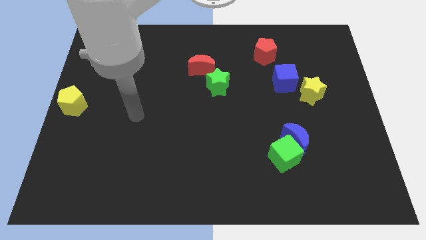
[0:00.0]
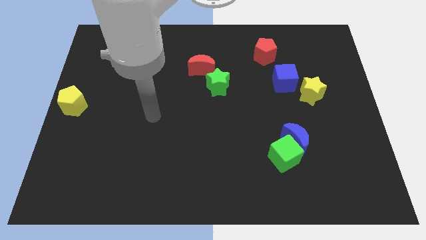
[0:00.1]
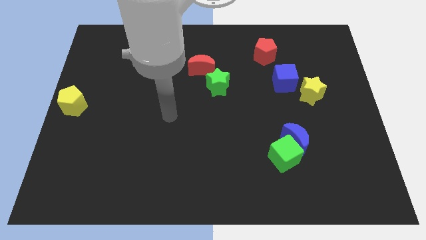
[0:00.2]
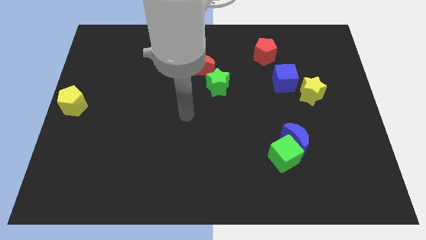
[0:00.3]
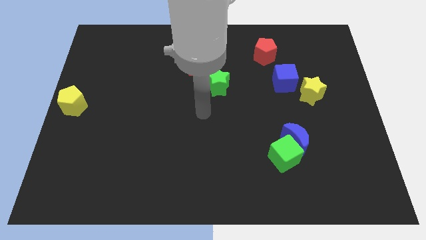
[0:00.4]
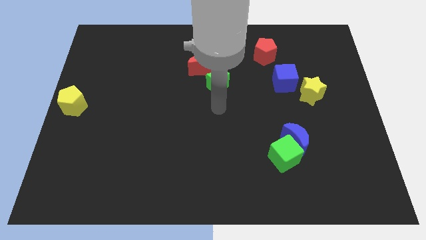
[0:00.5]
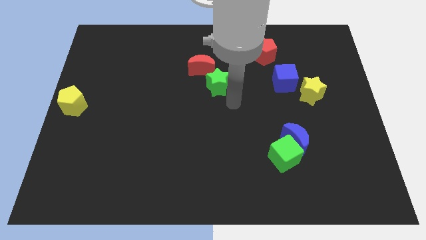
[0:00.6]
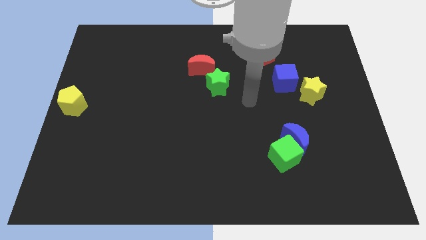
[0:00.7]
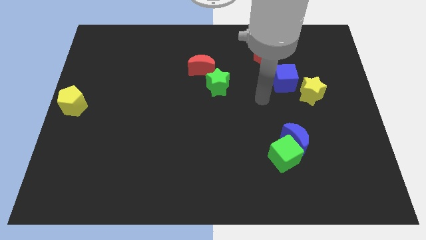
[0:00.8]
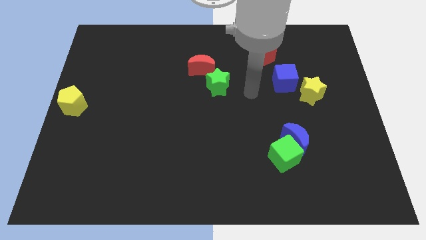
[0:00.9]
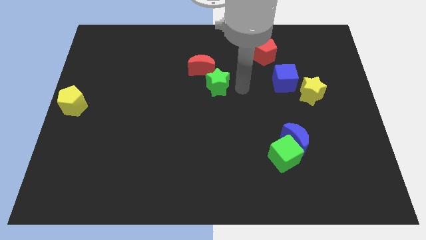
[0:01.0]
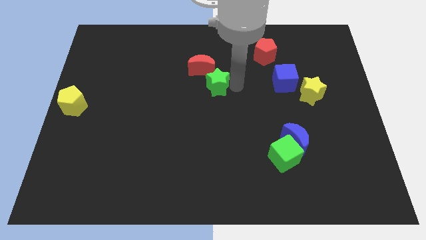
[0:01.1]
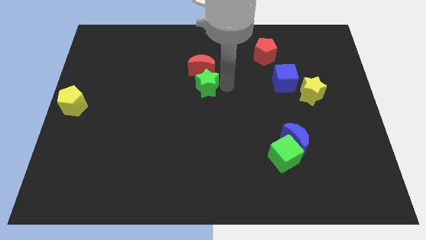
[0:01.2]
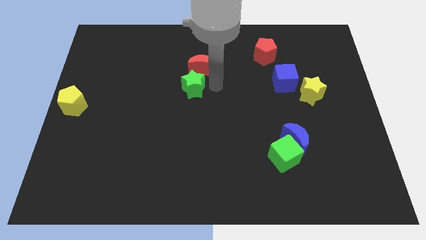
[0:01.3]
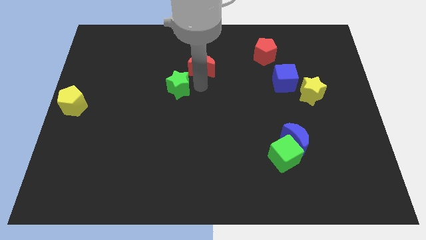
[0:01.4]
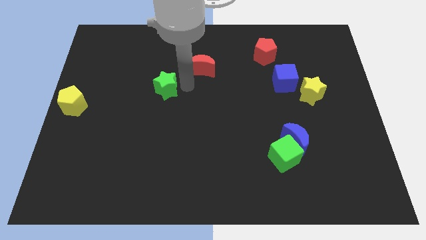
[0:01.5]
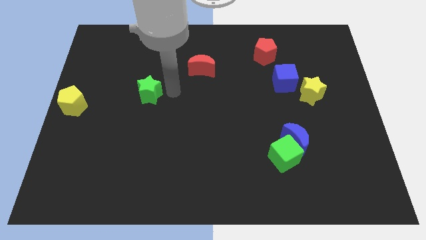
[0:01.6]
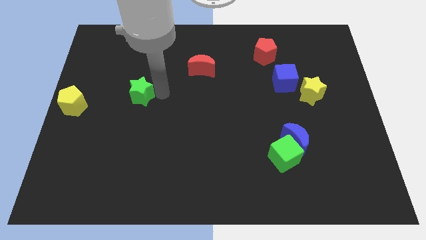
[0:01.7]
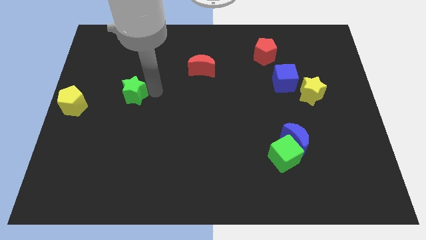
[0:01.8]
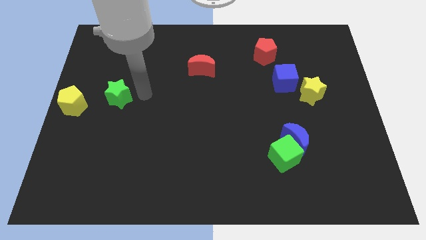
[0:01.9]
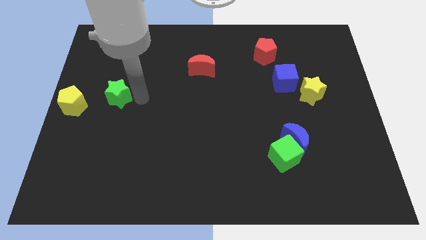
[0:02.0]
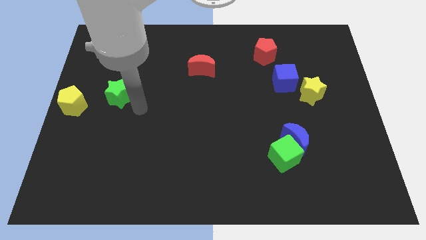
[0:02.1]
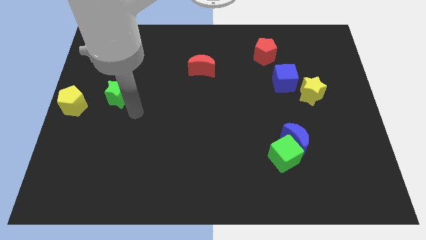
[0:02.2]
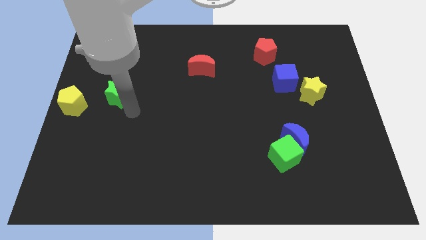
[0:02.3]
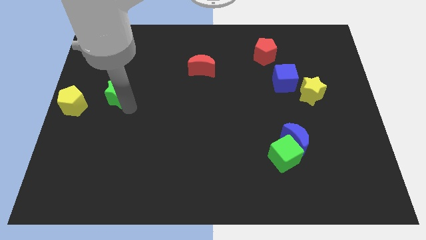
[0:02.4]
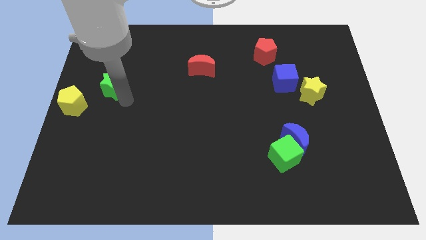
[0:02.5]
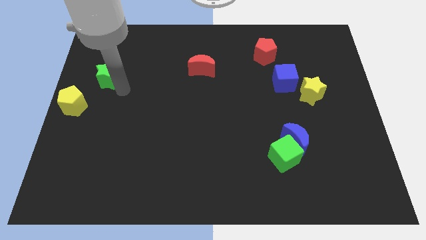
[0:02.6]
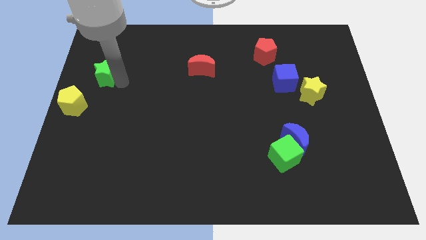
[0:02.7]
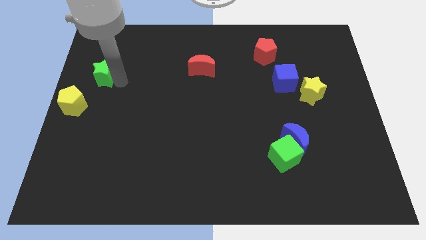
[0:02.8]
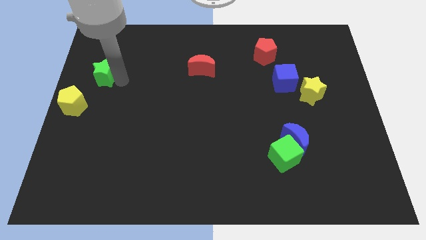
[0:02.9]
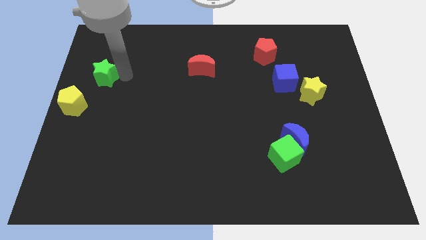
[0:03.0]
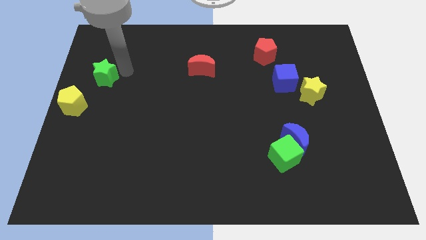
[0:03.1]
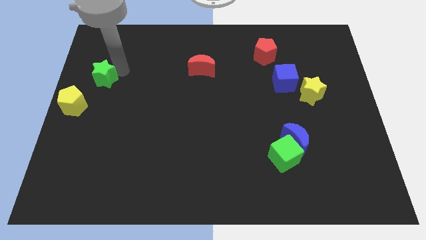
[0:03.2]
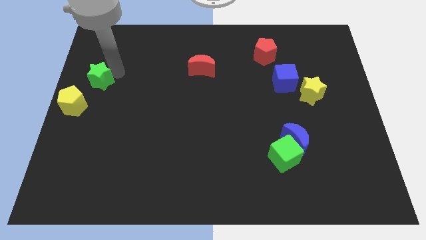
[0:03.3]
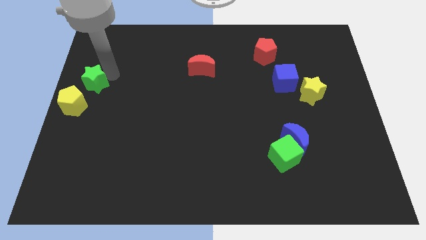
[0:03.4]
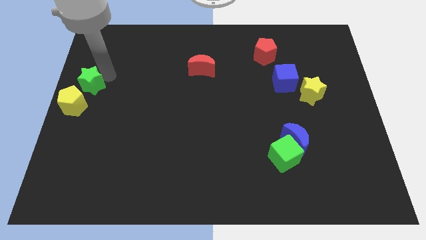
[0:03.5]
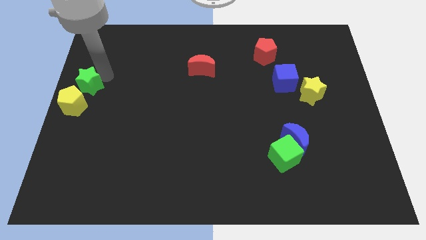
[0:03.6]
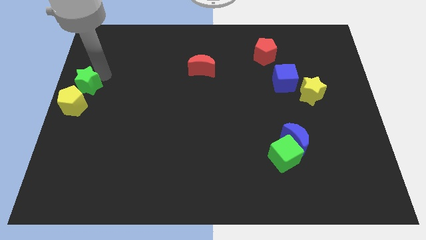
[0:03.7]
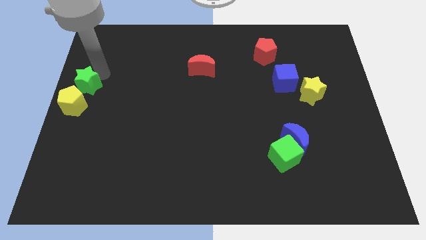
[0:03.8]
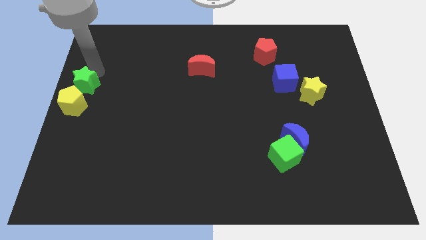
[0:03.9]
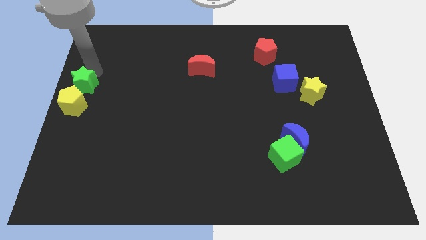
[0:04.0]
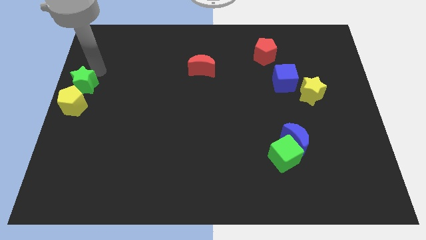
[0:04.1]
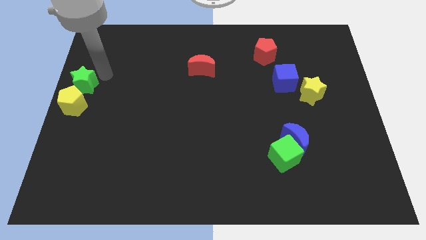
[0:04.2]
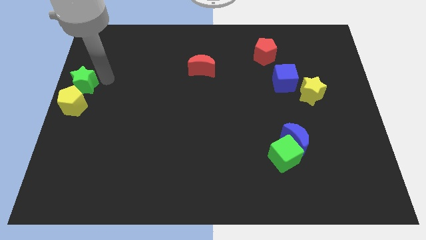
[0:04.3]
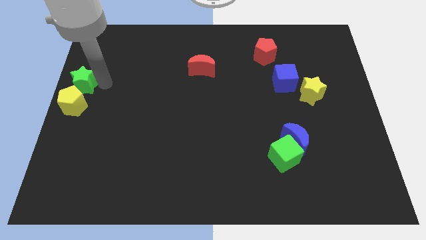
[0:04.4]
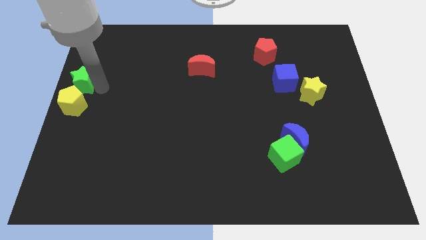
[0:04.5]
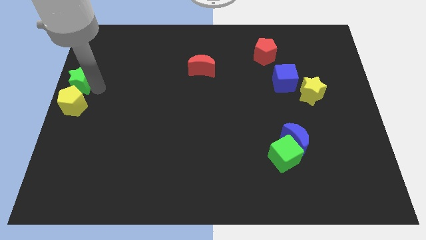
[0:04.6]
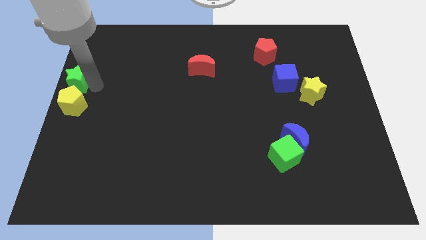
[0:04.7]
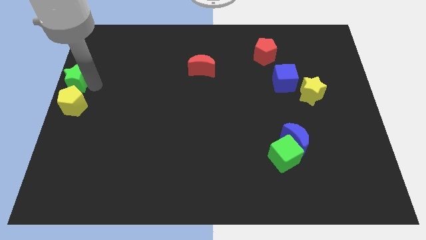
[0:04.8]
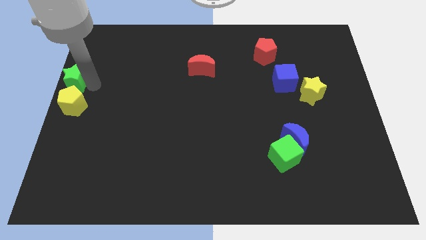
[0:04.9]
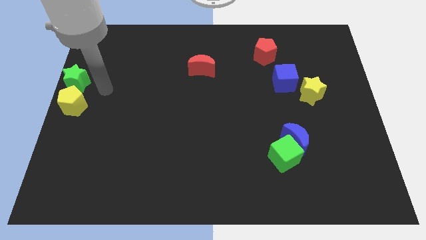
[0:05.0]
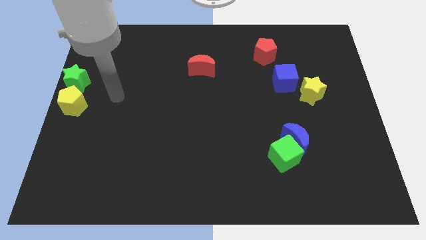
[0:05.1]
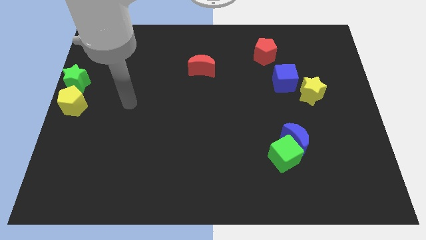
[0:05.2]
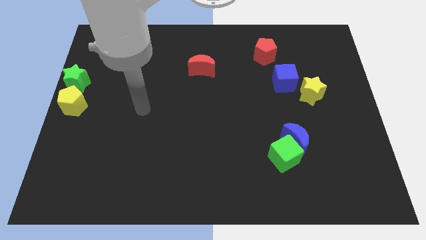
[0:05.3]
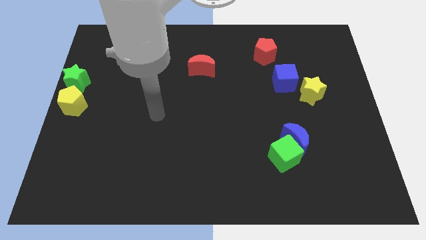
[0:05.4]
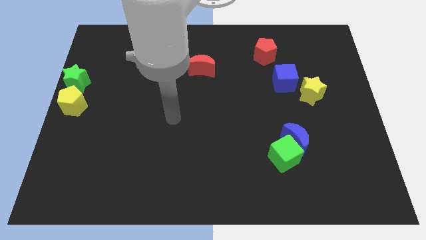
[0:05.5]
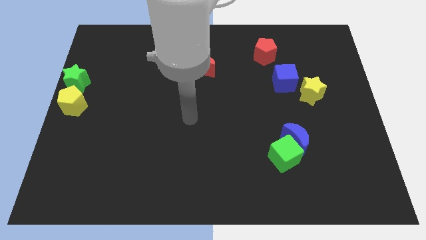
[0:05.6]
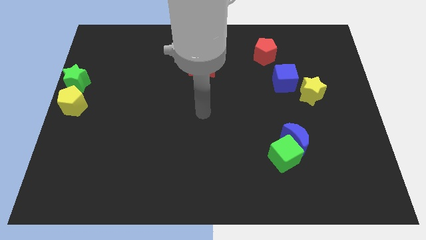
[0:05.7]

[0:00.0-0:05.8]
place the green star above the yellow pentagon

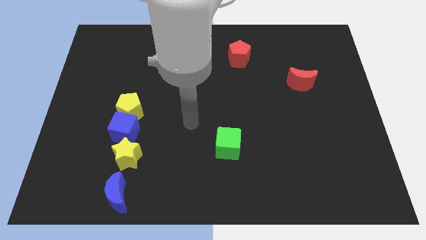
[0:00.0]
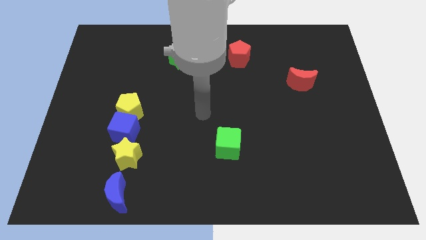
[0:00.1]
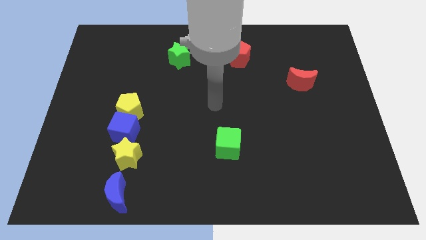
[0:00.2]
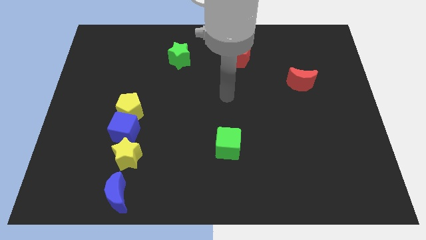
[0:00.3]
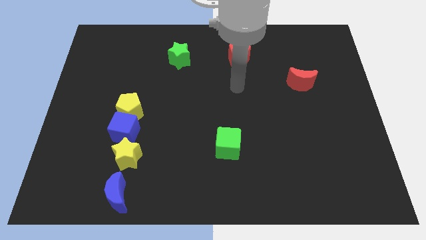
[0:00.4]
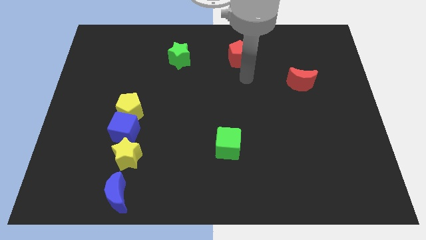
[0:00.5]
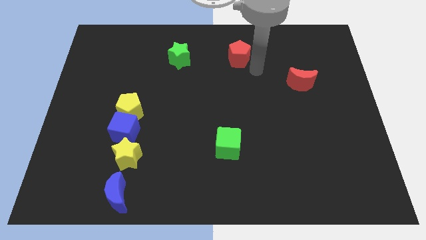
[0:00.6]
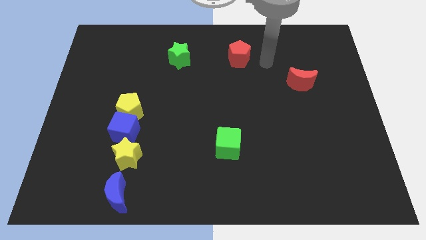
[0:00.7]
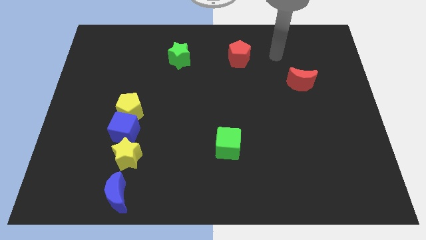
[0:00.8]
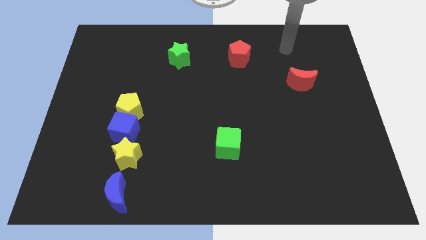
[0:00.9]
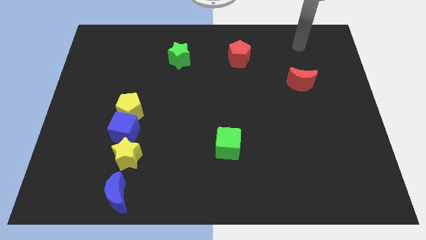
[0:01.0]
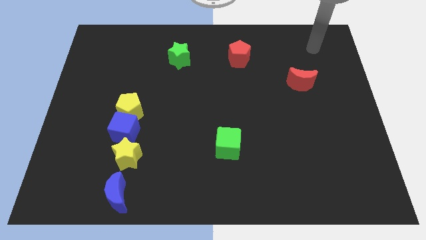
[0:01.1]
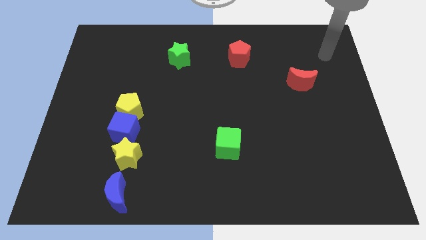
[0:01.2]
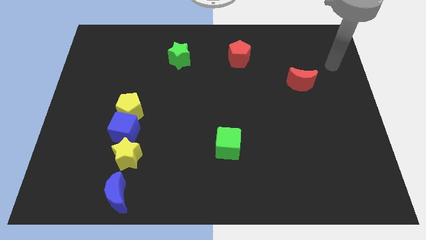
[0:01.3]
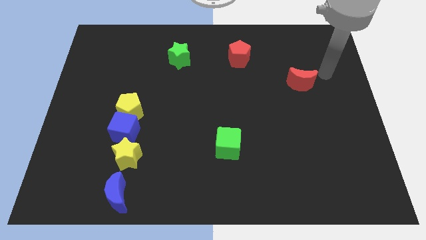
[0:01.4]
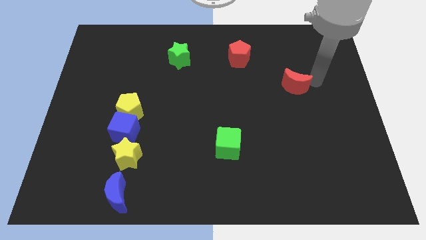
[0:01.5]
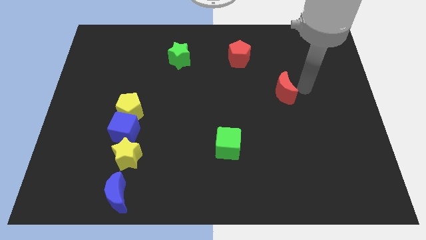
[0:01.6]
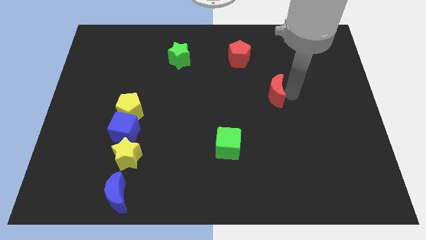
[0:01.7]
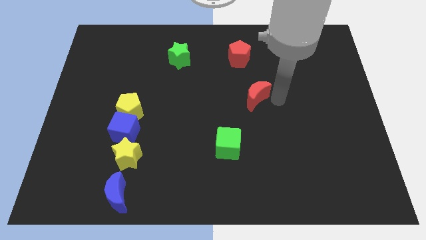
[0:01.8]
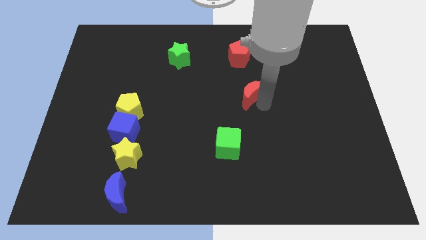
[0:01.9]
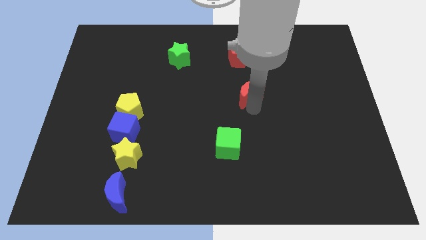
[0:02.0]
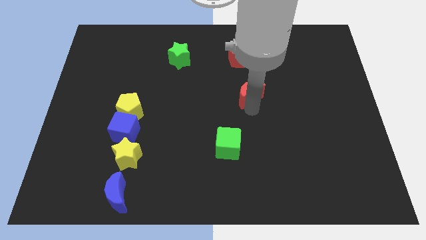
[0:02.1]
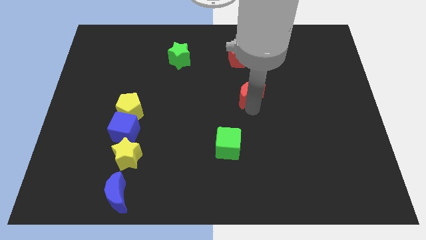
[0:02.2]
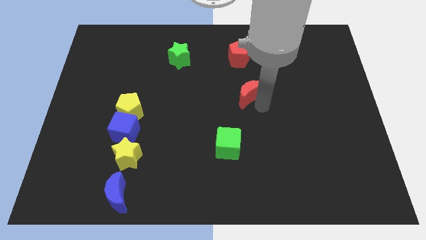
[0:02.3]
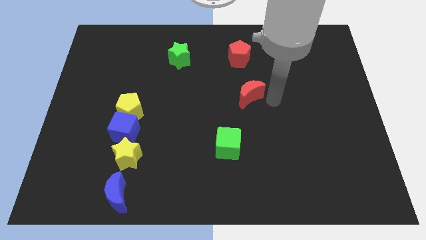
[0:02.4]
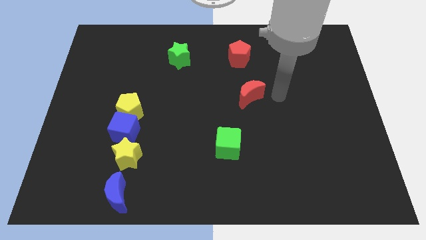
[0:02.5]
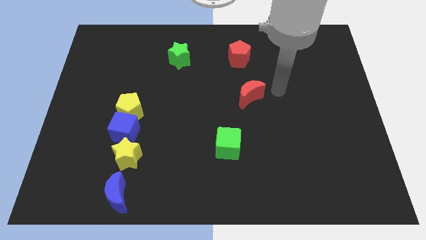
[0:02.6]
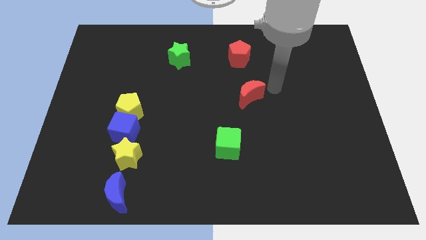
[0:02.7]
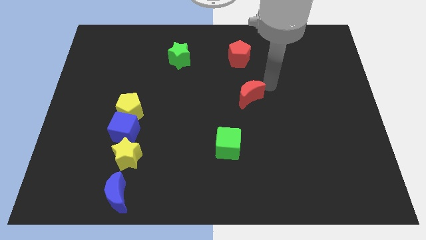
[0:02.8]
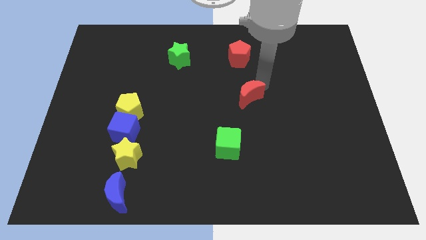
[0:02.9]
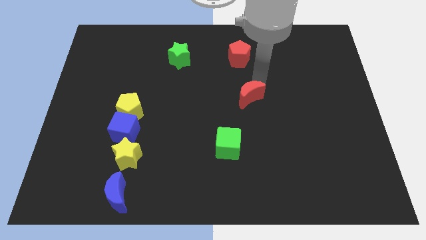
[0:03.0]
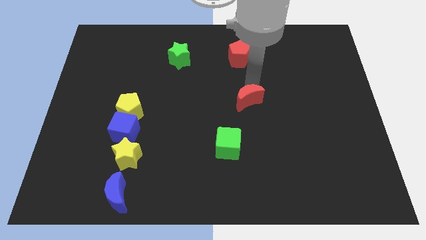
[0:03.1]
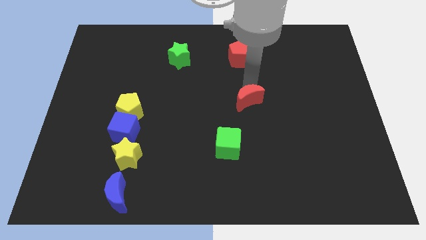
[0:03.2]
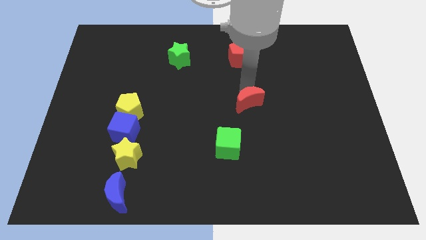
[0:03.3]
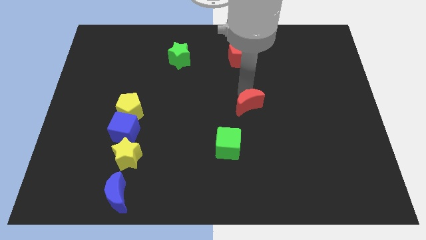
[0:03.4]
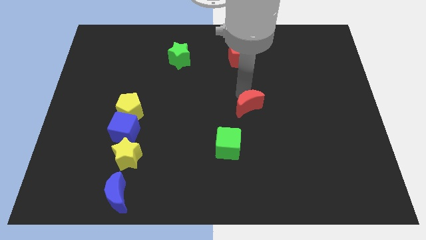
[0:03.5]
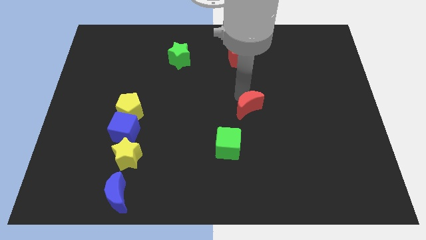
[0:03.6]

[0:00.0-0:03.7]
move the red moon towards center
